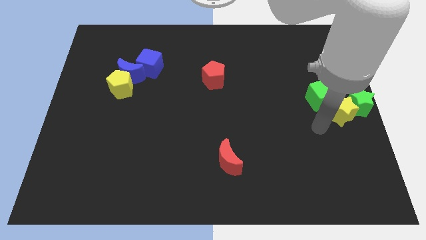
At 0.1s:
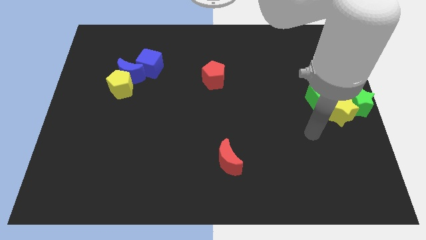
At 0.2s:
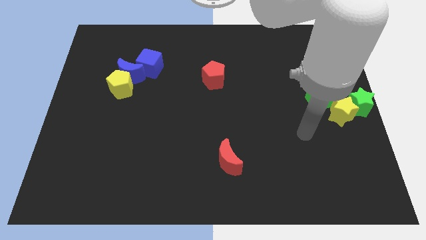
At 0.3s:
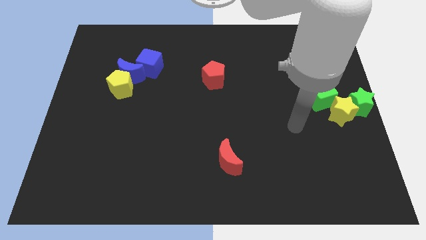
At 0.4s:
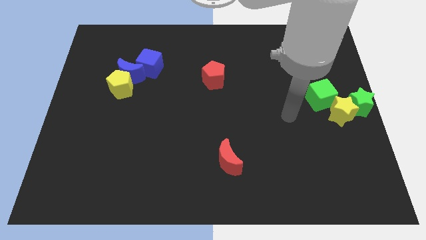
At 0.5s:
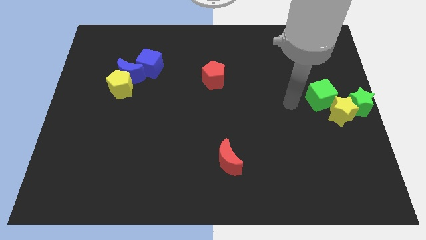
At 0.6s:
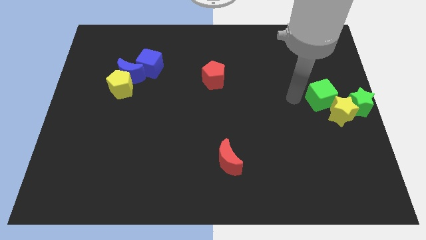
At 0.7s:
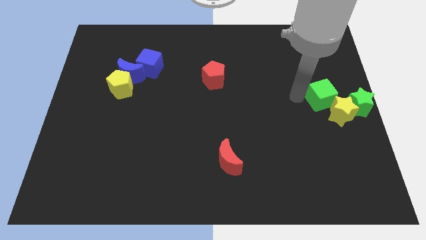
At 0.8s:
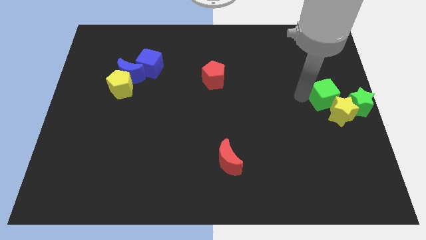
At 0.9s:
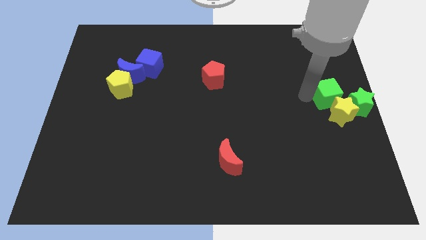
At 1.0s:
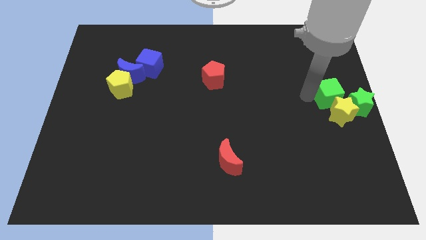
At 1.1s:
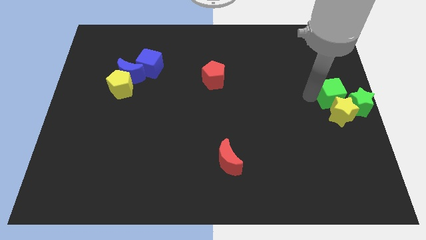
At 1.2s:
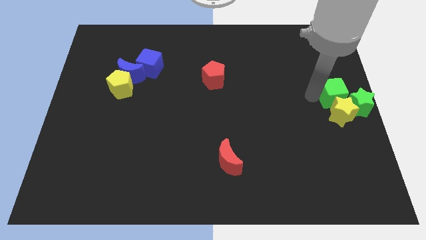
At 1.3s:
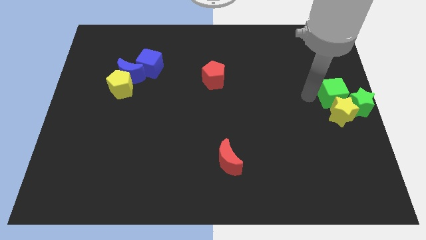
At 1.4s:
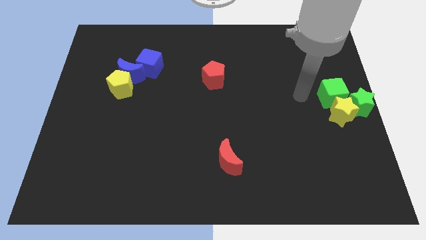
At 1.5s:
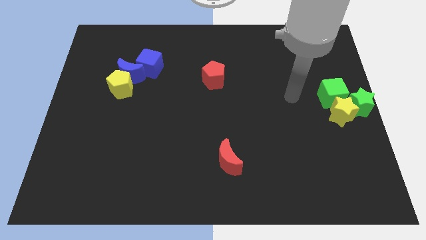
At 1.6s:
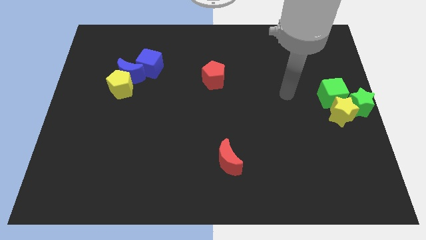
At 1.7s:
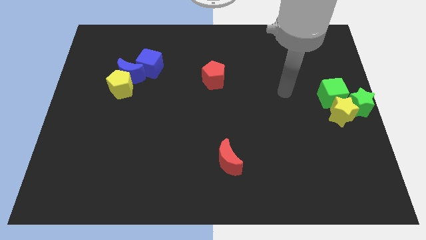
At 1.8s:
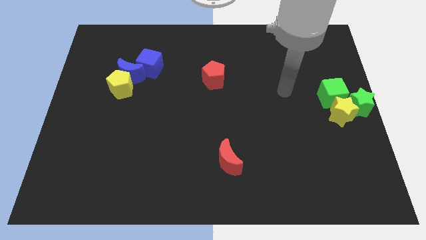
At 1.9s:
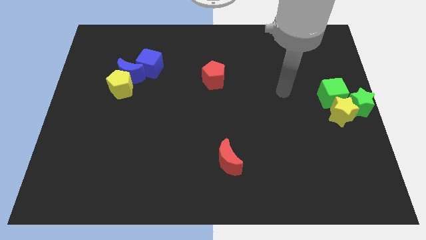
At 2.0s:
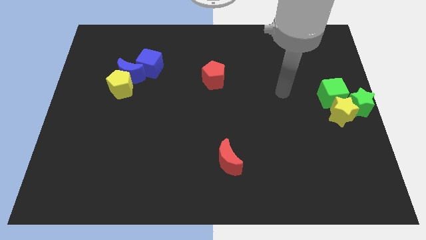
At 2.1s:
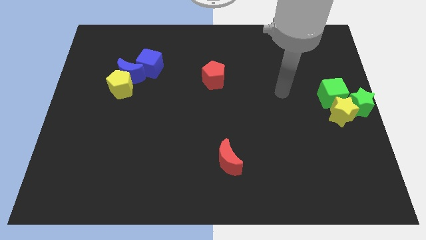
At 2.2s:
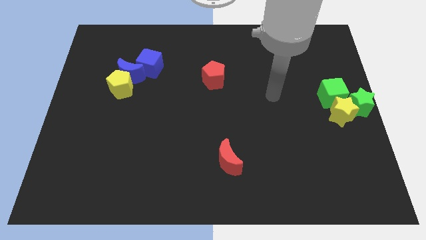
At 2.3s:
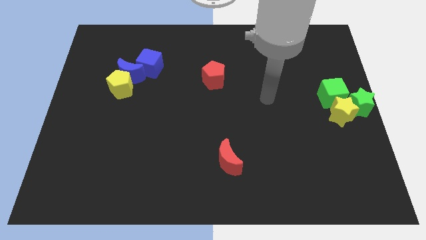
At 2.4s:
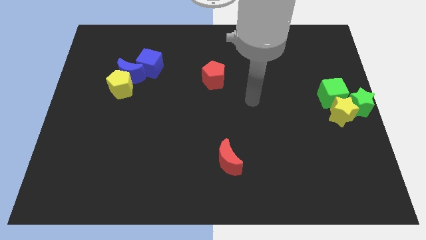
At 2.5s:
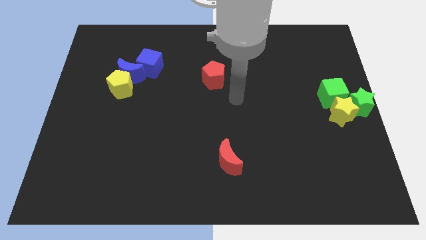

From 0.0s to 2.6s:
push the green cube towards the right a bit

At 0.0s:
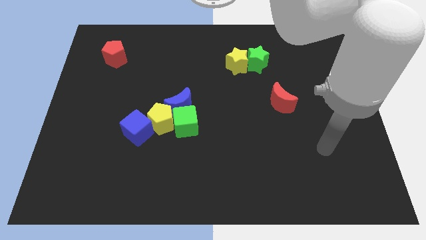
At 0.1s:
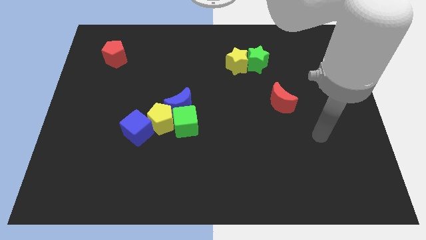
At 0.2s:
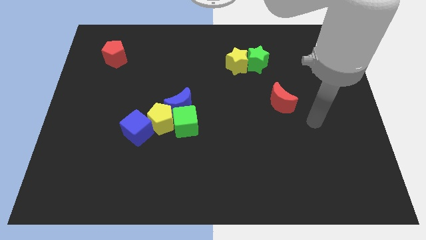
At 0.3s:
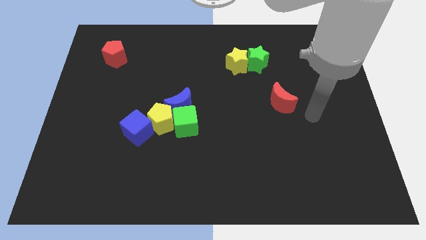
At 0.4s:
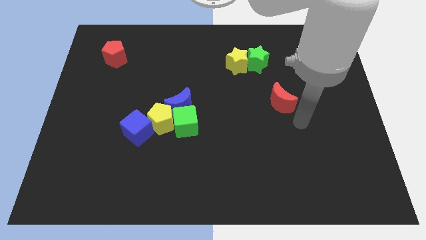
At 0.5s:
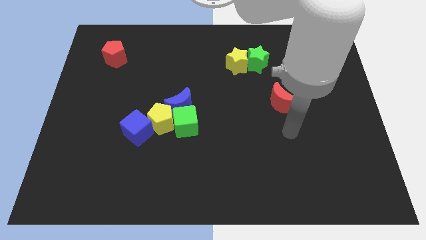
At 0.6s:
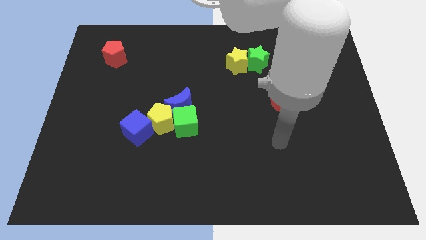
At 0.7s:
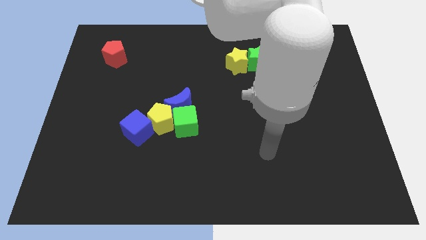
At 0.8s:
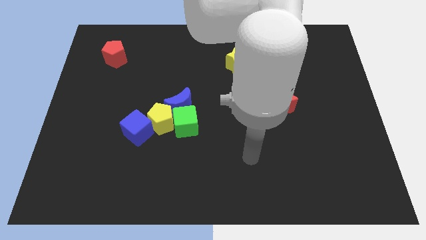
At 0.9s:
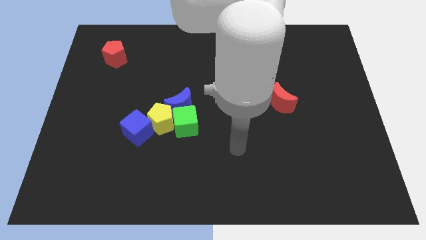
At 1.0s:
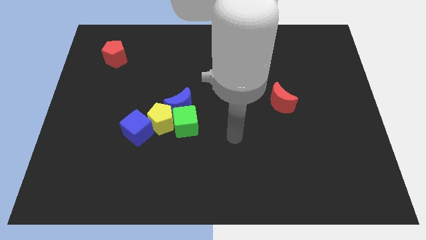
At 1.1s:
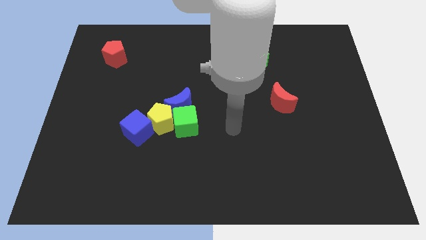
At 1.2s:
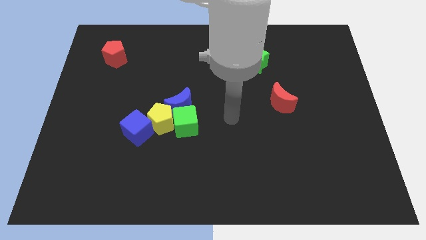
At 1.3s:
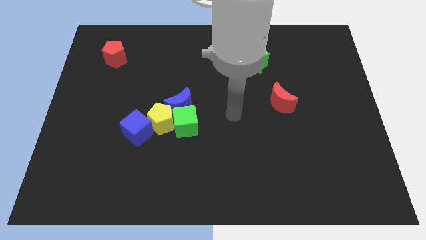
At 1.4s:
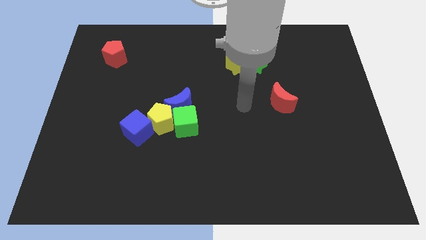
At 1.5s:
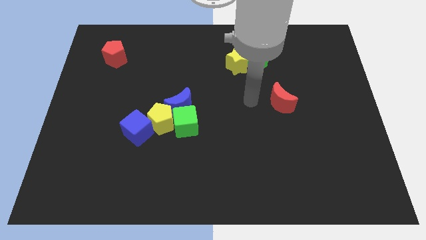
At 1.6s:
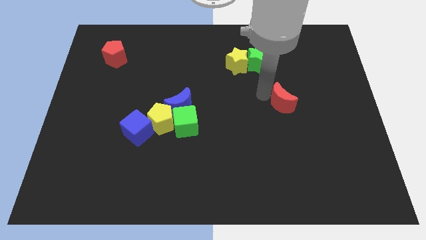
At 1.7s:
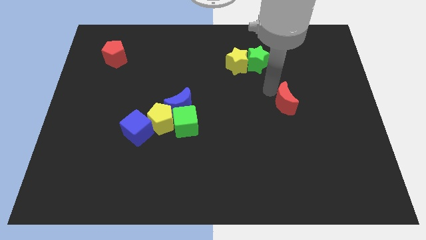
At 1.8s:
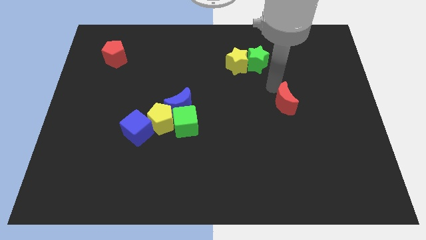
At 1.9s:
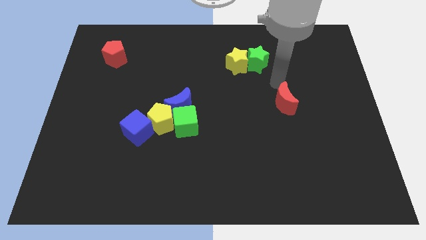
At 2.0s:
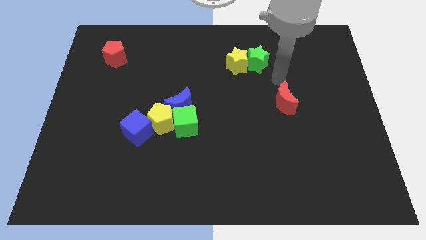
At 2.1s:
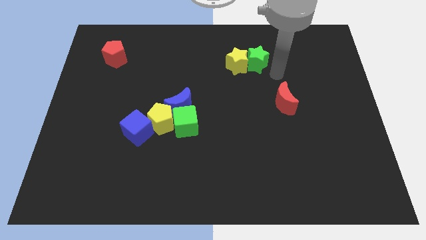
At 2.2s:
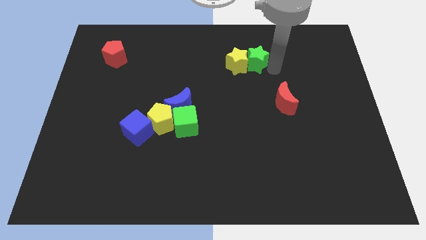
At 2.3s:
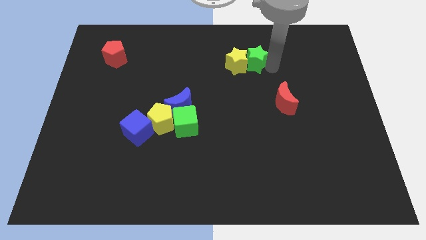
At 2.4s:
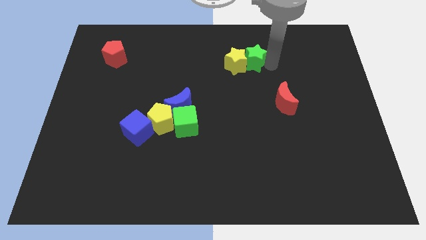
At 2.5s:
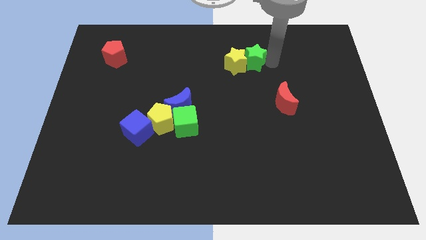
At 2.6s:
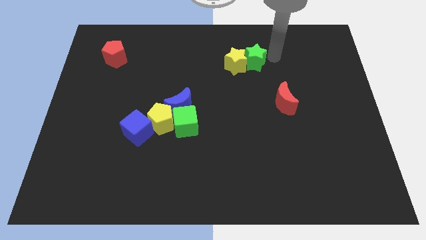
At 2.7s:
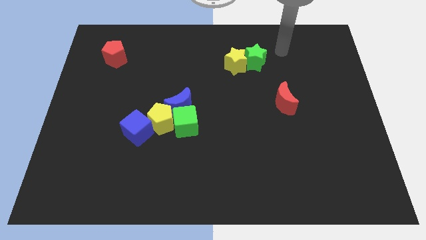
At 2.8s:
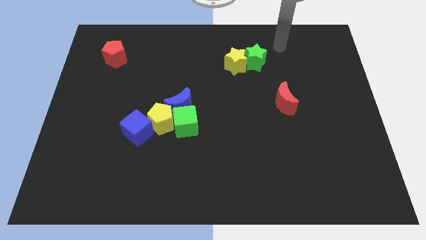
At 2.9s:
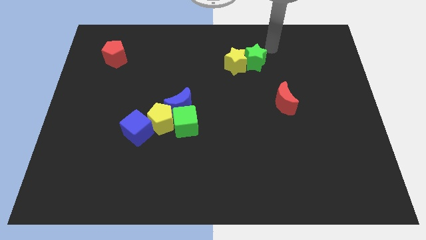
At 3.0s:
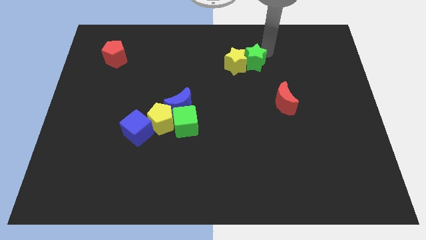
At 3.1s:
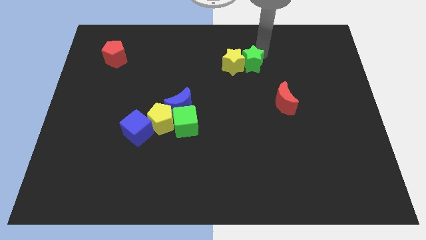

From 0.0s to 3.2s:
slightly move the red crescent and green star in opposite directions

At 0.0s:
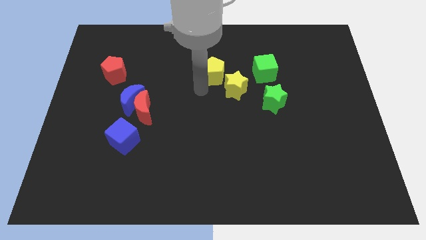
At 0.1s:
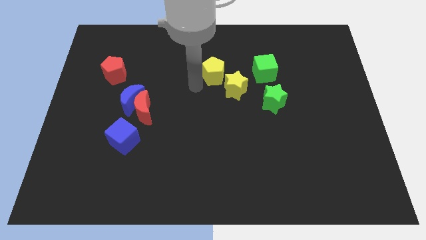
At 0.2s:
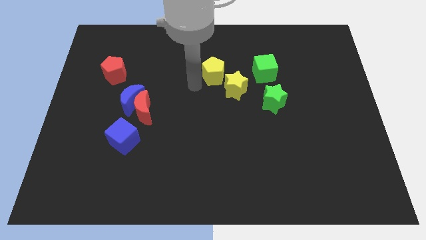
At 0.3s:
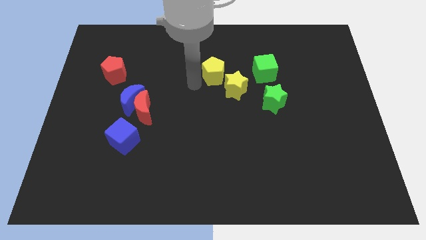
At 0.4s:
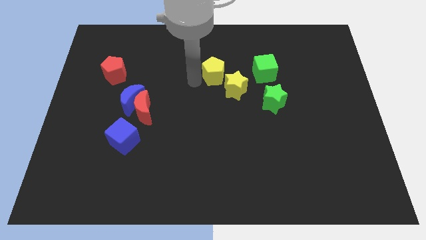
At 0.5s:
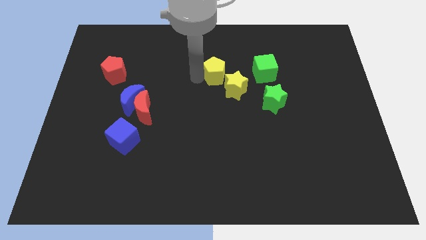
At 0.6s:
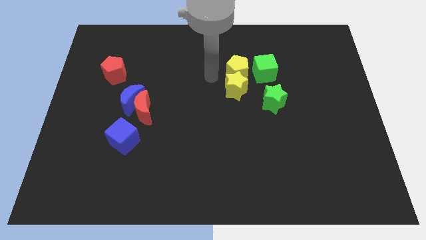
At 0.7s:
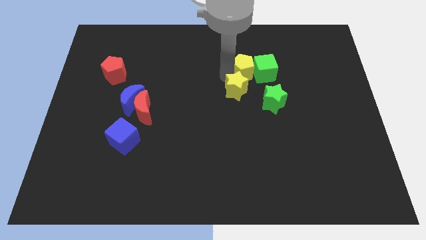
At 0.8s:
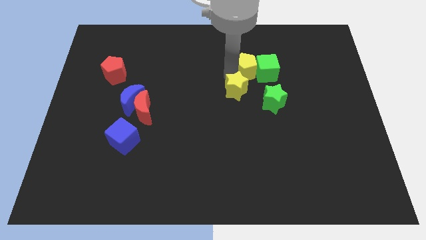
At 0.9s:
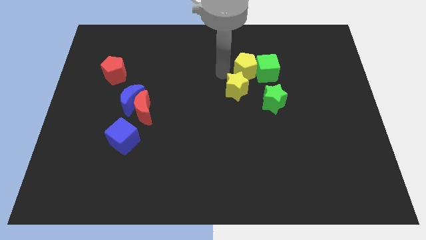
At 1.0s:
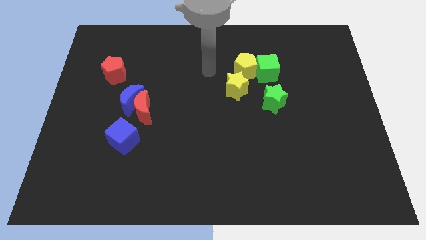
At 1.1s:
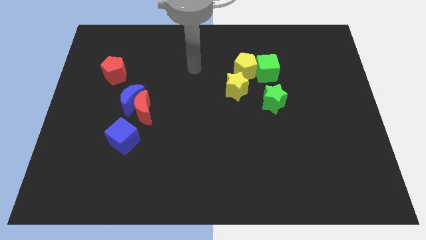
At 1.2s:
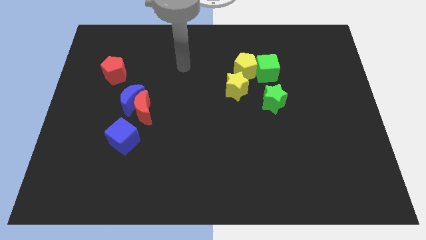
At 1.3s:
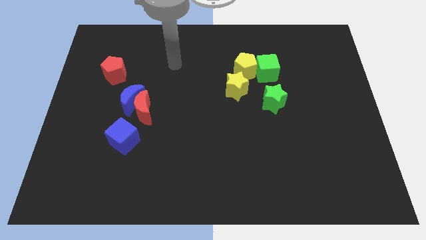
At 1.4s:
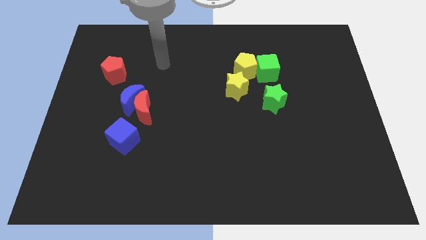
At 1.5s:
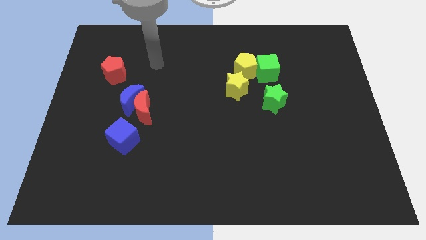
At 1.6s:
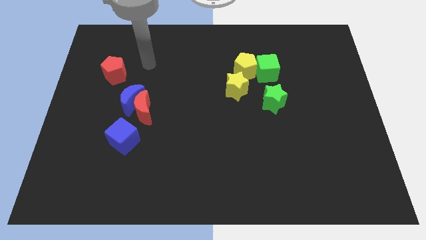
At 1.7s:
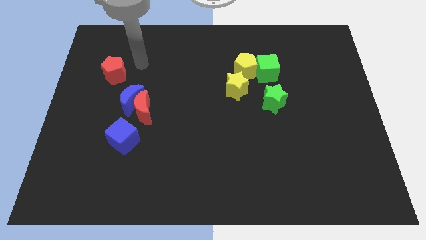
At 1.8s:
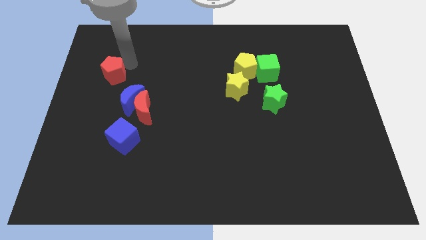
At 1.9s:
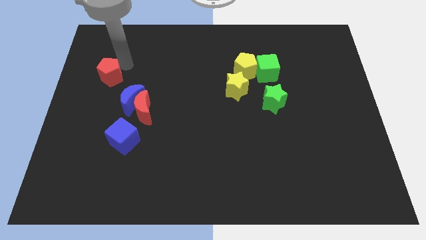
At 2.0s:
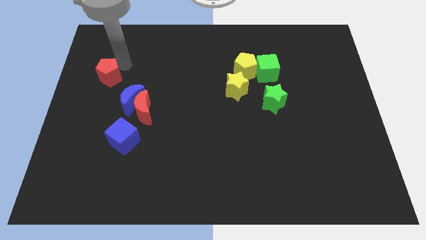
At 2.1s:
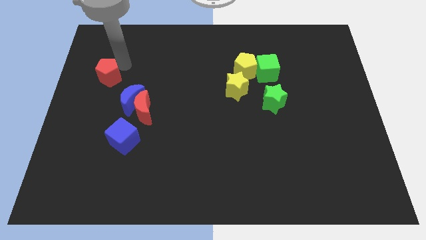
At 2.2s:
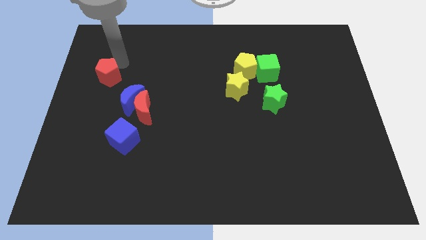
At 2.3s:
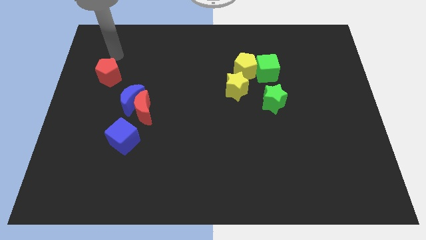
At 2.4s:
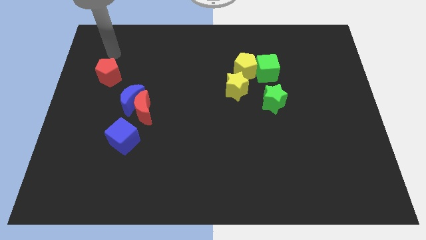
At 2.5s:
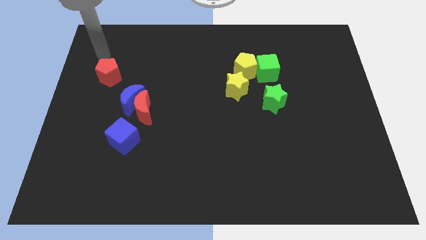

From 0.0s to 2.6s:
place your arm above red pentagon

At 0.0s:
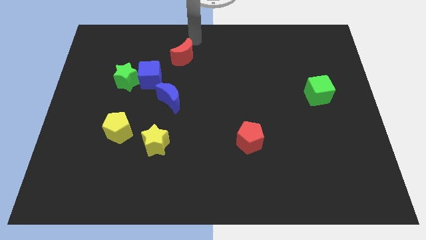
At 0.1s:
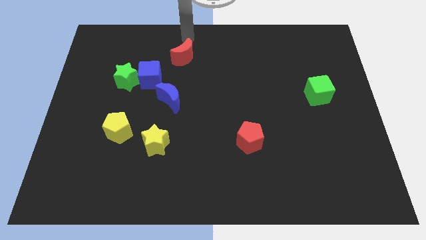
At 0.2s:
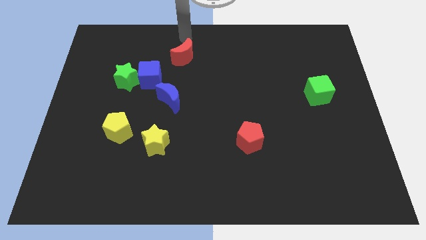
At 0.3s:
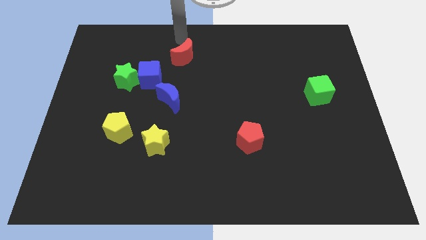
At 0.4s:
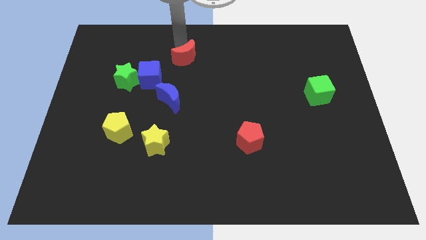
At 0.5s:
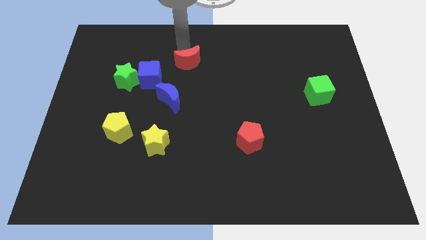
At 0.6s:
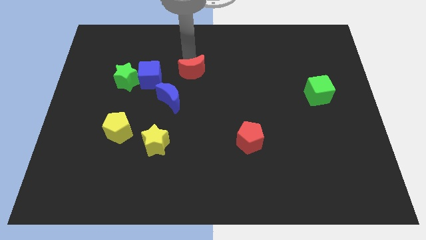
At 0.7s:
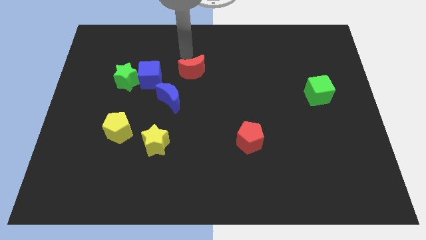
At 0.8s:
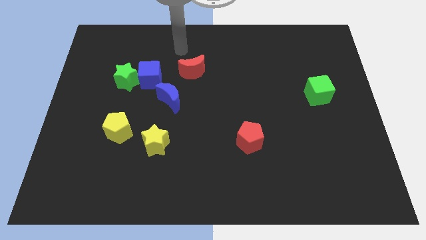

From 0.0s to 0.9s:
place red moon to the right of blue cube
